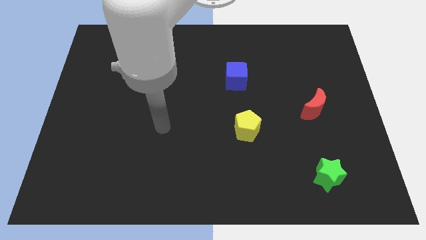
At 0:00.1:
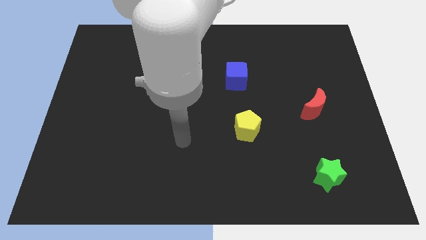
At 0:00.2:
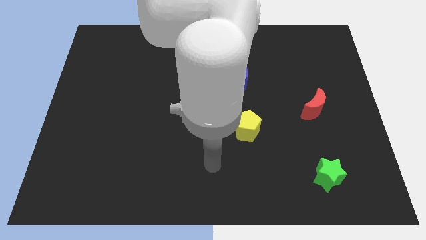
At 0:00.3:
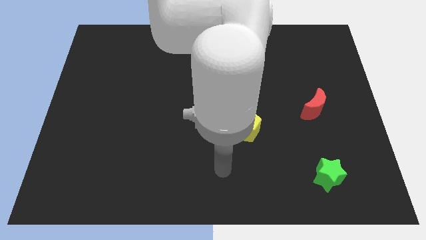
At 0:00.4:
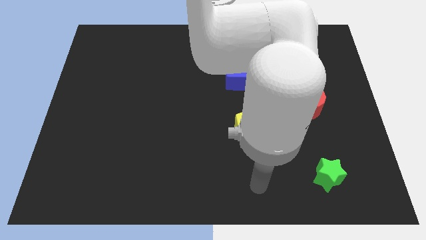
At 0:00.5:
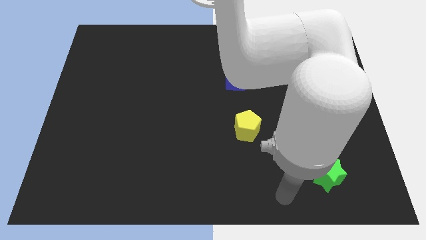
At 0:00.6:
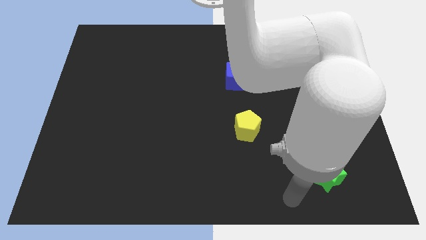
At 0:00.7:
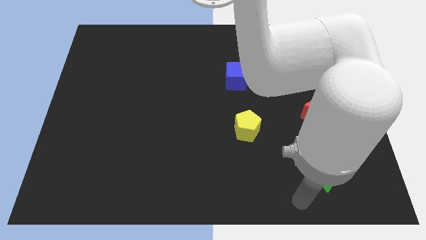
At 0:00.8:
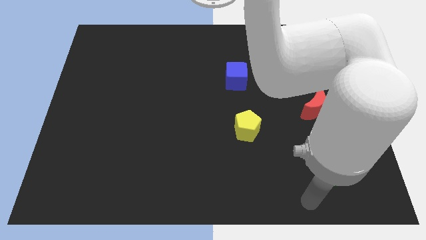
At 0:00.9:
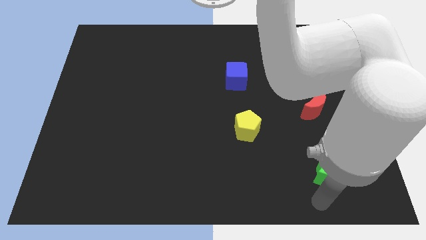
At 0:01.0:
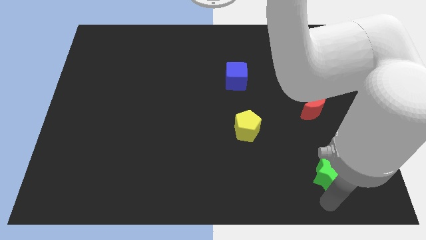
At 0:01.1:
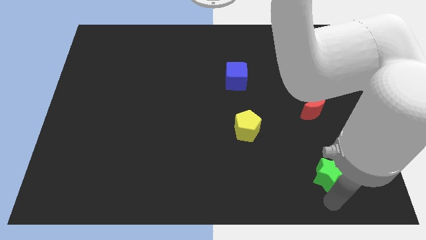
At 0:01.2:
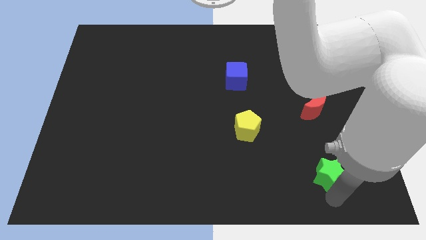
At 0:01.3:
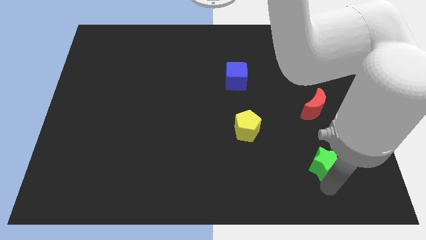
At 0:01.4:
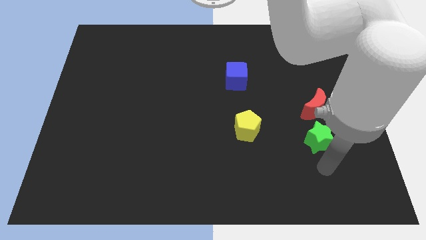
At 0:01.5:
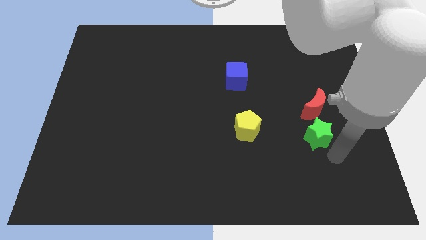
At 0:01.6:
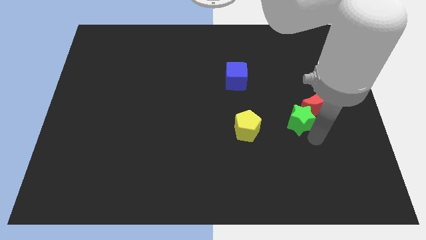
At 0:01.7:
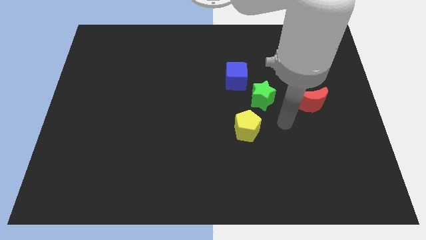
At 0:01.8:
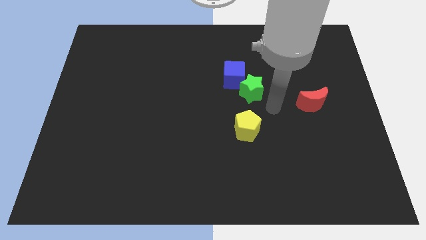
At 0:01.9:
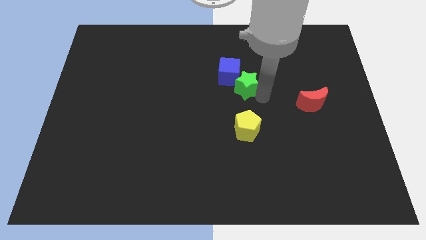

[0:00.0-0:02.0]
slide the green block to the cube

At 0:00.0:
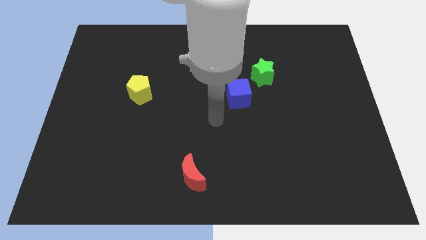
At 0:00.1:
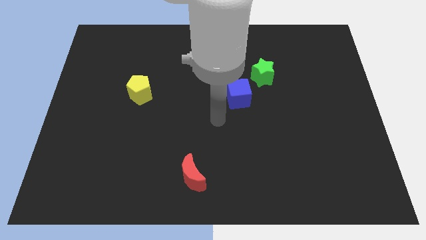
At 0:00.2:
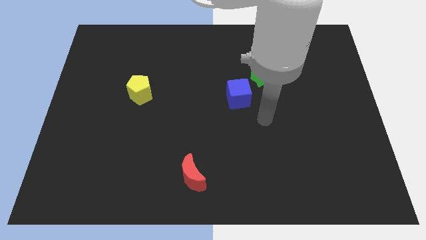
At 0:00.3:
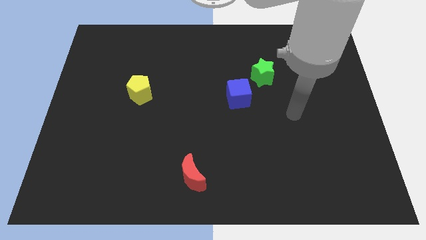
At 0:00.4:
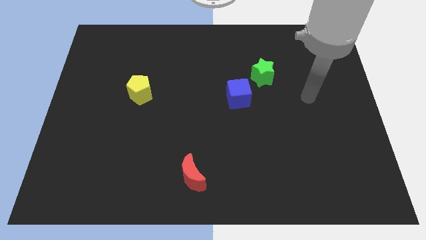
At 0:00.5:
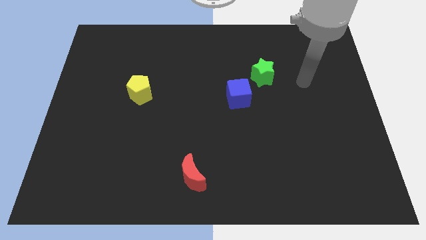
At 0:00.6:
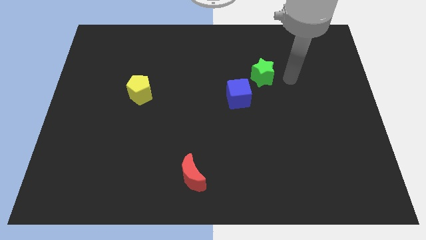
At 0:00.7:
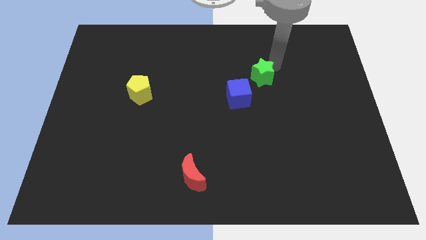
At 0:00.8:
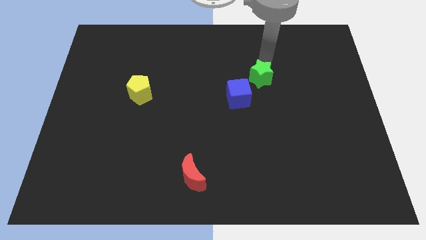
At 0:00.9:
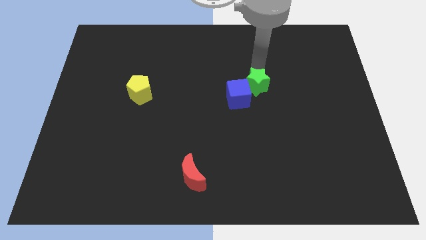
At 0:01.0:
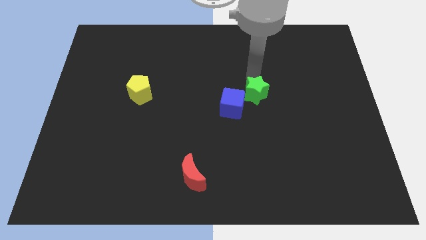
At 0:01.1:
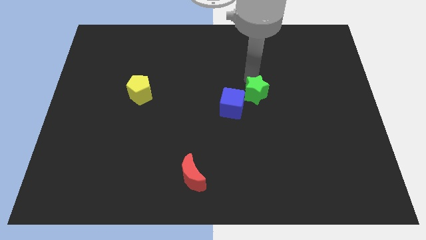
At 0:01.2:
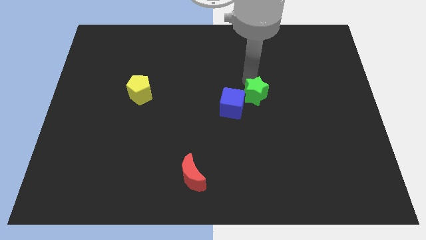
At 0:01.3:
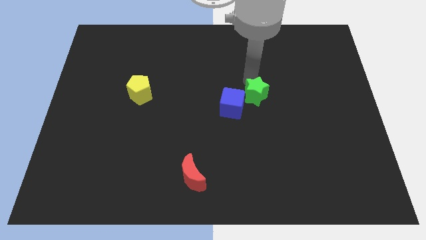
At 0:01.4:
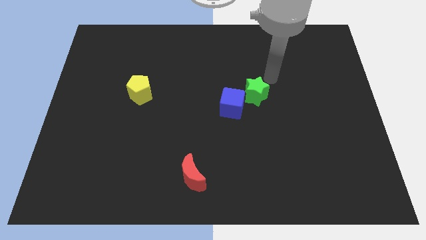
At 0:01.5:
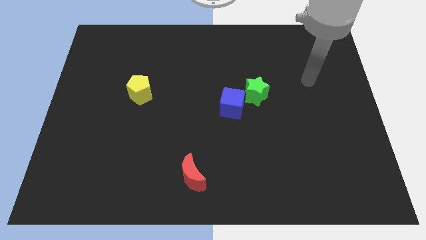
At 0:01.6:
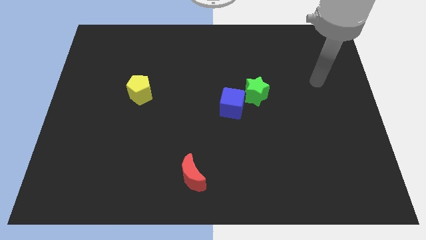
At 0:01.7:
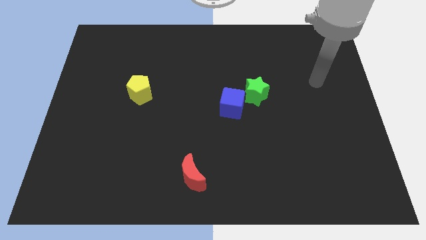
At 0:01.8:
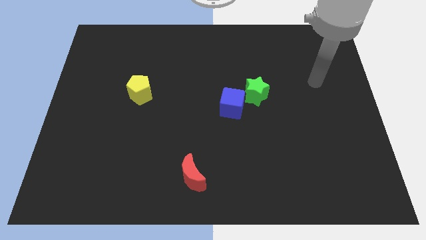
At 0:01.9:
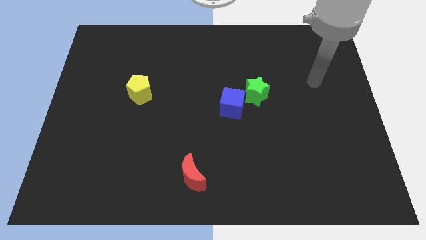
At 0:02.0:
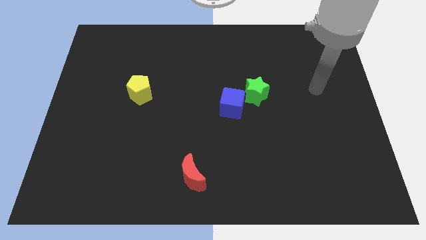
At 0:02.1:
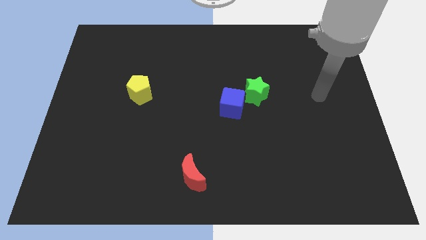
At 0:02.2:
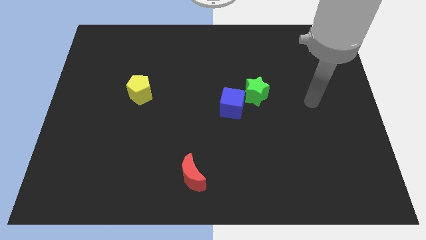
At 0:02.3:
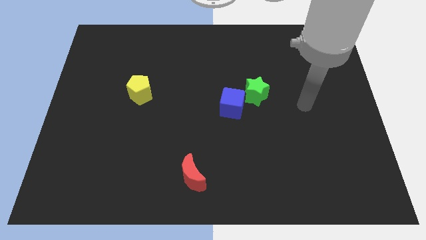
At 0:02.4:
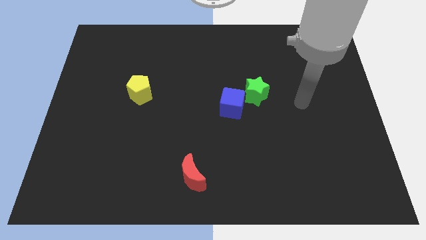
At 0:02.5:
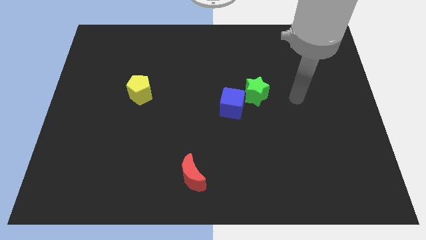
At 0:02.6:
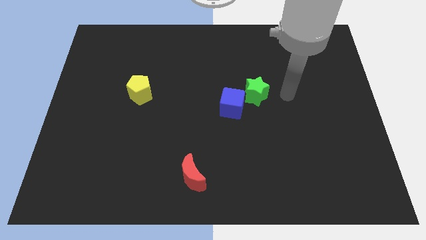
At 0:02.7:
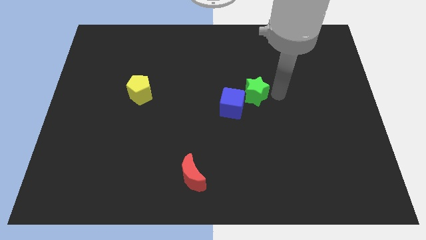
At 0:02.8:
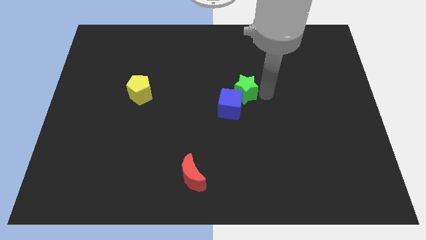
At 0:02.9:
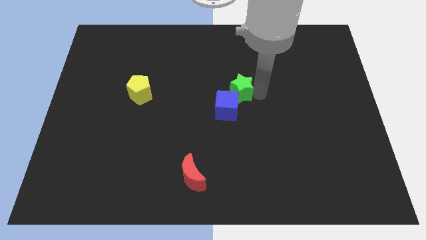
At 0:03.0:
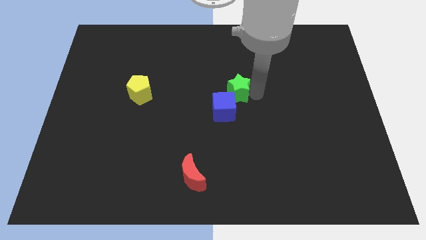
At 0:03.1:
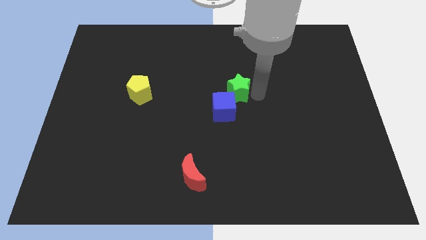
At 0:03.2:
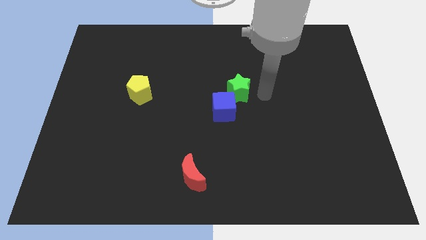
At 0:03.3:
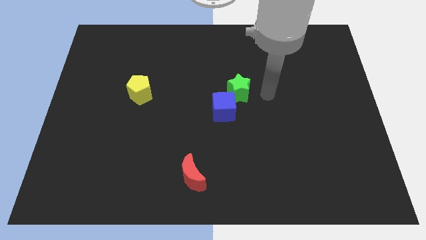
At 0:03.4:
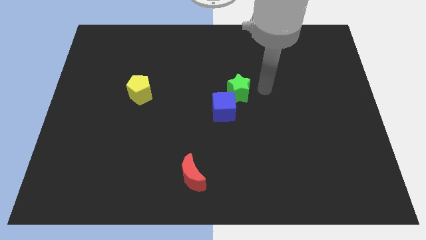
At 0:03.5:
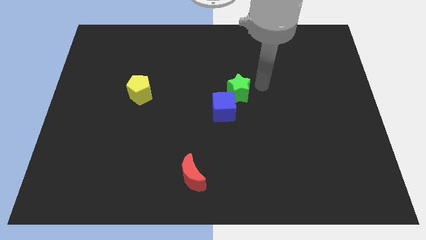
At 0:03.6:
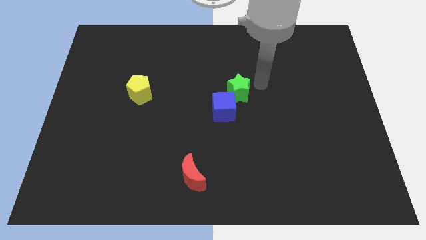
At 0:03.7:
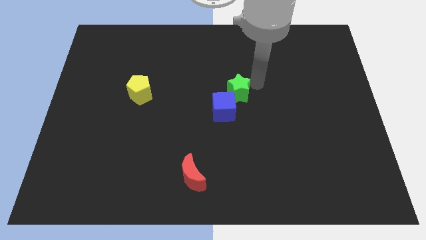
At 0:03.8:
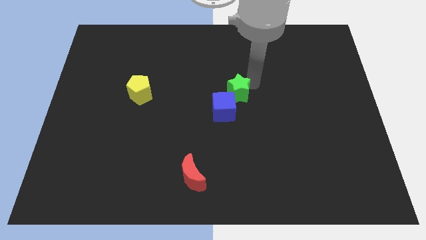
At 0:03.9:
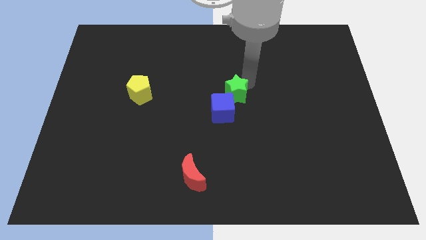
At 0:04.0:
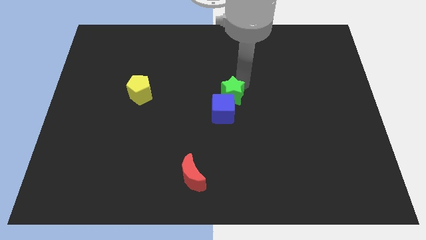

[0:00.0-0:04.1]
slide the green block close to the blue cube

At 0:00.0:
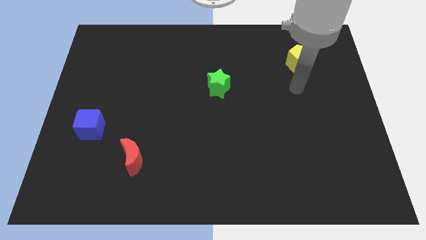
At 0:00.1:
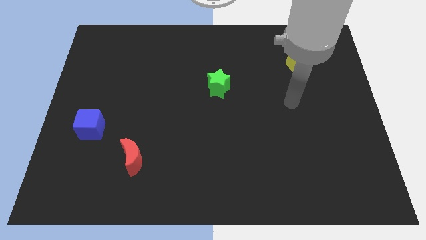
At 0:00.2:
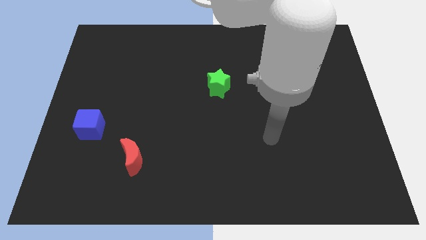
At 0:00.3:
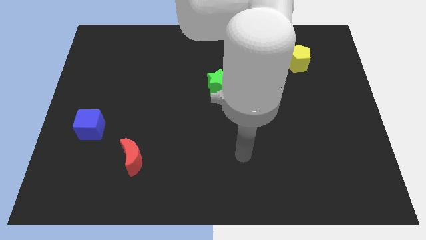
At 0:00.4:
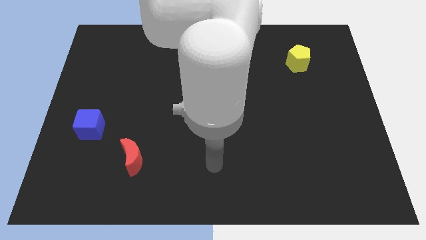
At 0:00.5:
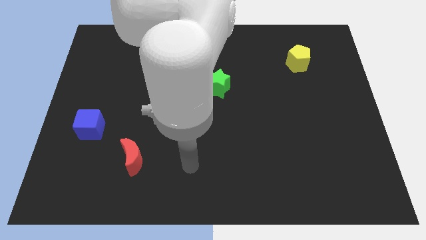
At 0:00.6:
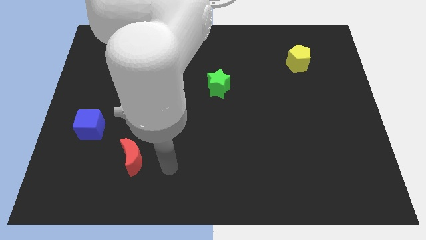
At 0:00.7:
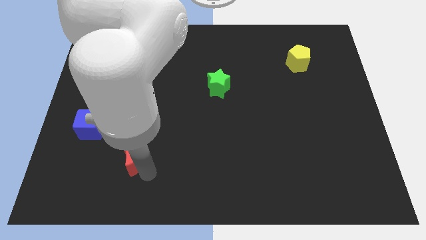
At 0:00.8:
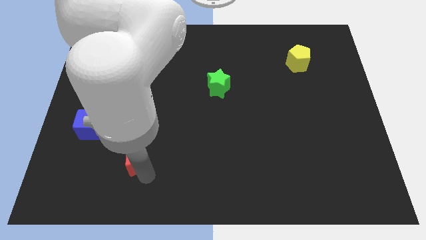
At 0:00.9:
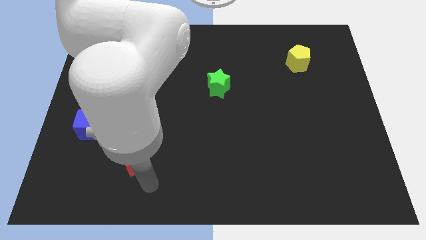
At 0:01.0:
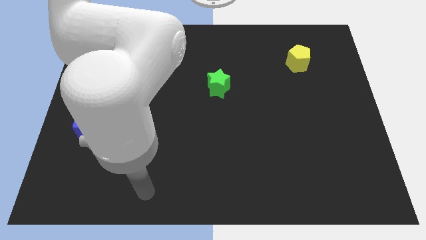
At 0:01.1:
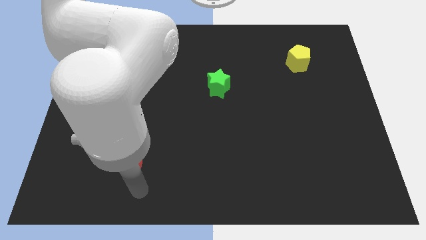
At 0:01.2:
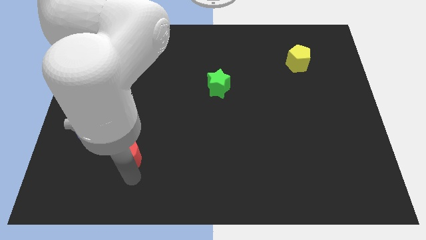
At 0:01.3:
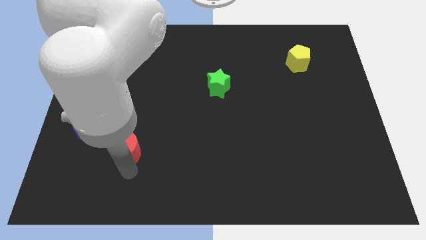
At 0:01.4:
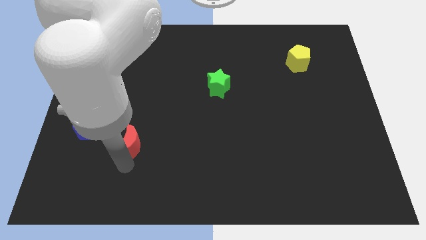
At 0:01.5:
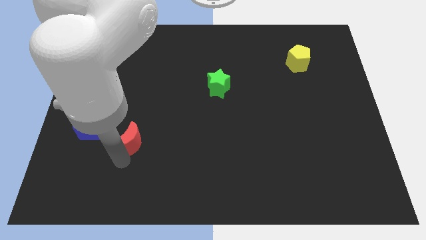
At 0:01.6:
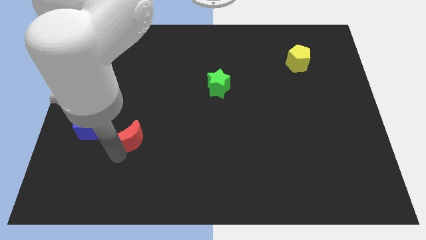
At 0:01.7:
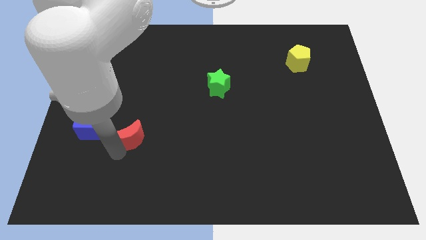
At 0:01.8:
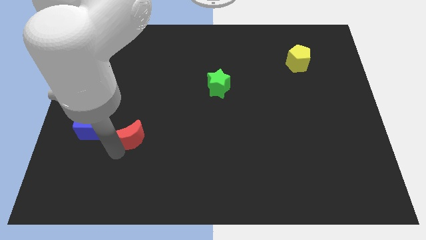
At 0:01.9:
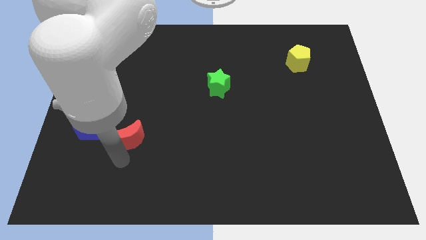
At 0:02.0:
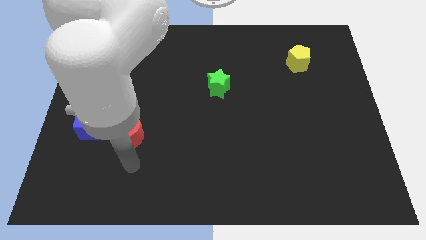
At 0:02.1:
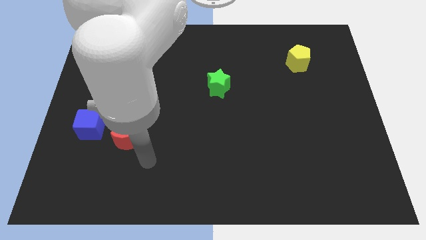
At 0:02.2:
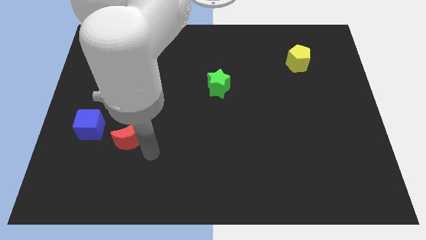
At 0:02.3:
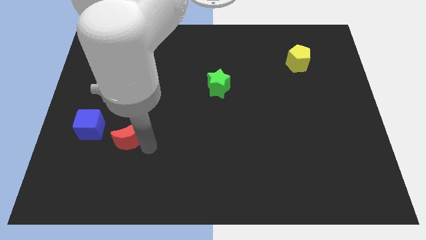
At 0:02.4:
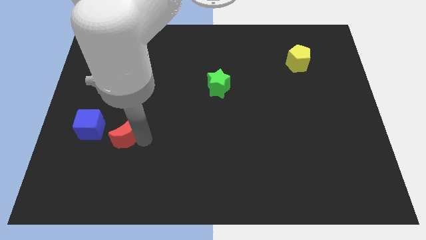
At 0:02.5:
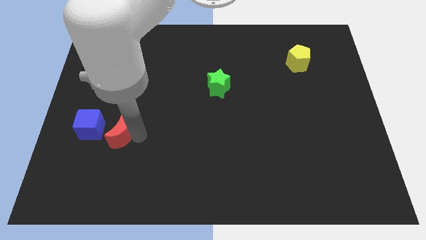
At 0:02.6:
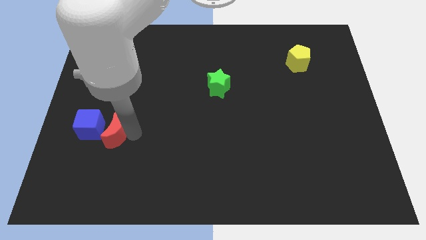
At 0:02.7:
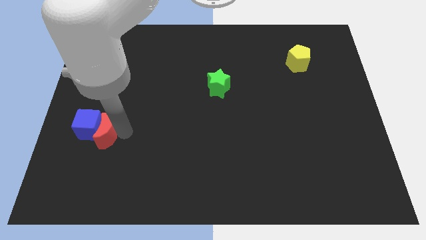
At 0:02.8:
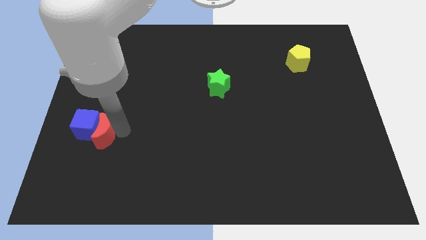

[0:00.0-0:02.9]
slide the moon close to the blue cube
